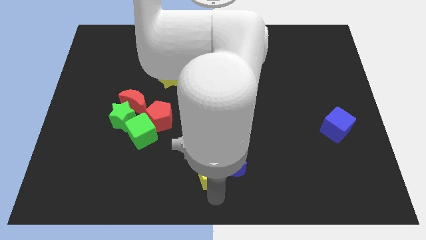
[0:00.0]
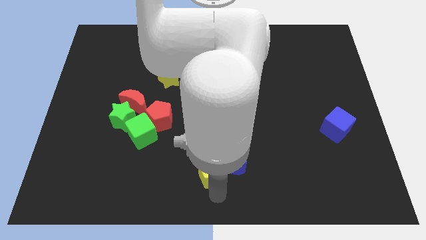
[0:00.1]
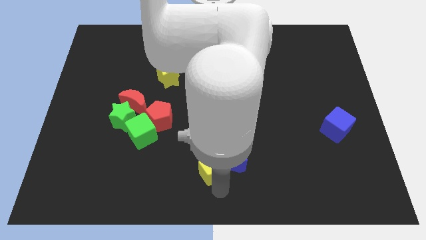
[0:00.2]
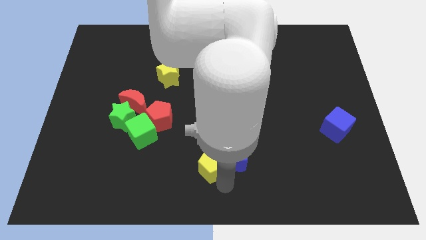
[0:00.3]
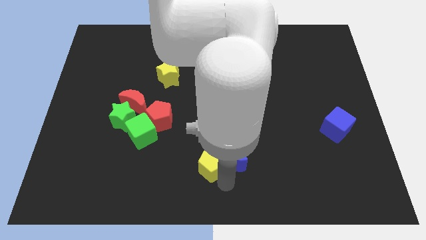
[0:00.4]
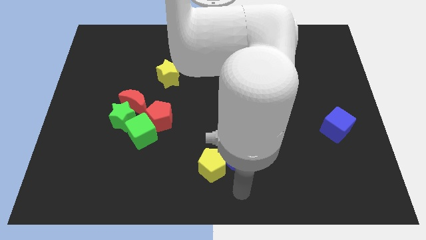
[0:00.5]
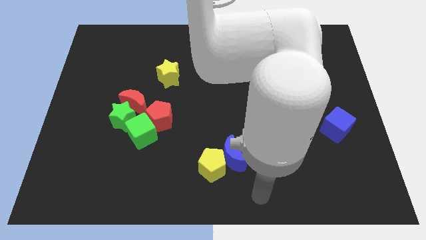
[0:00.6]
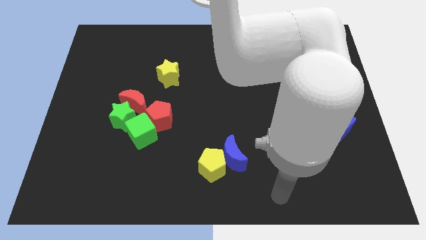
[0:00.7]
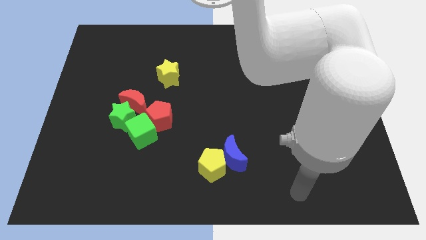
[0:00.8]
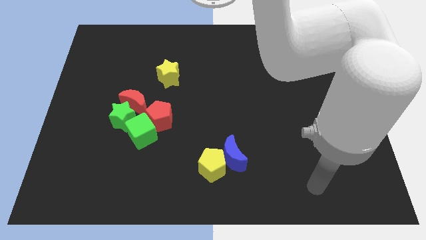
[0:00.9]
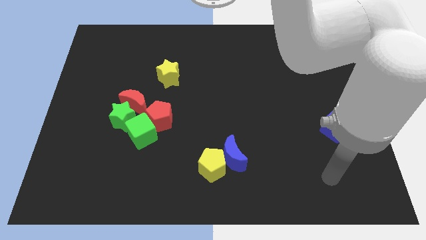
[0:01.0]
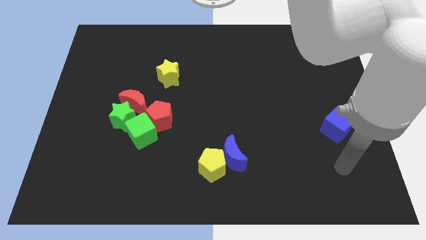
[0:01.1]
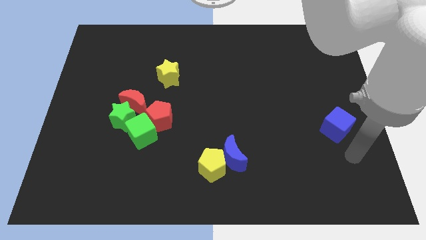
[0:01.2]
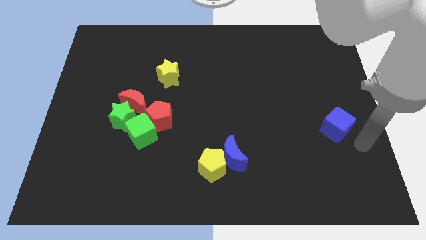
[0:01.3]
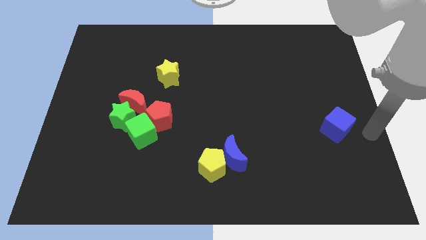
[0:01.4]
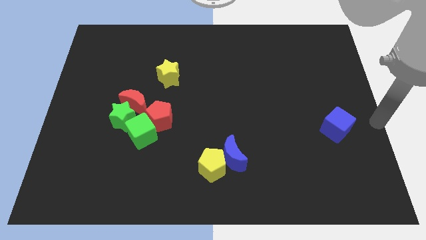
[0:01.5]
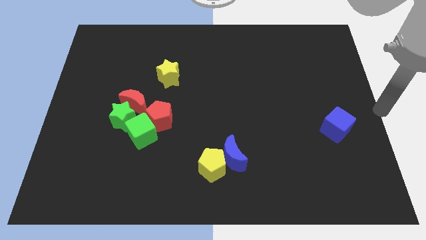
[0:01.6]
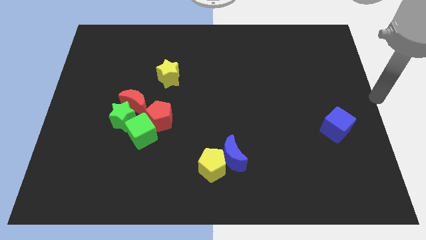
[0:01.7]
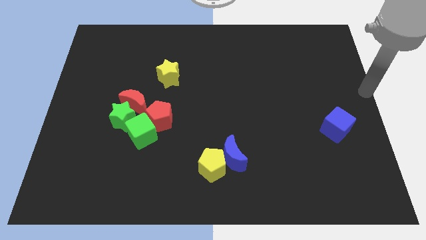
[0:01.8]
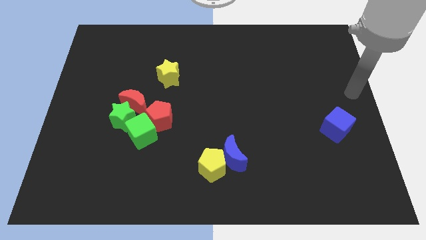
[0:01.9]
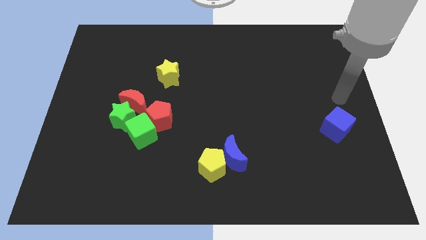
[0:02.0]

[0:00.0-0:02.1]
move the arm at the top of the blue cube

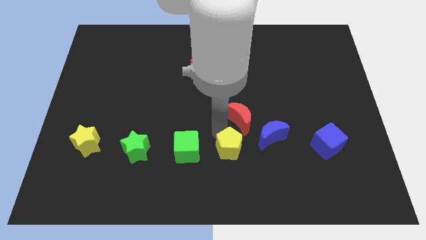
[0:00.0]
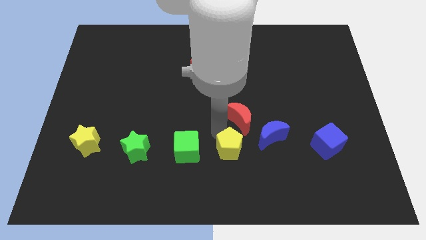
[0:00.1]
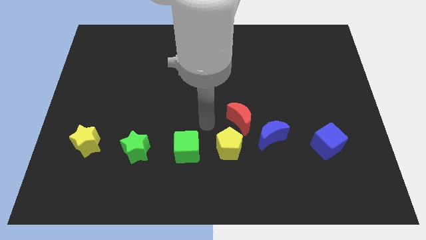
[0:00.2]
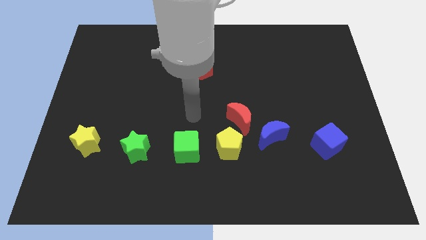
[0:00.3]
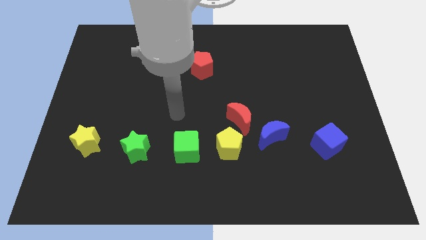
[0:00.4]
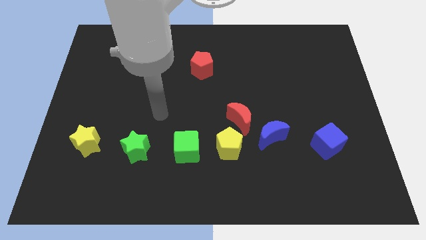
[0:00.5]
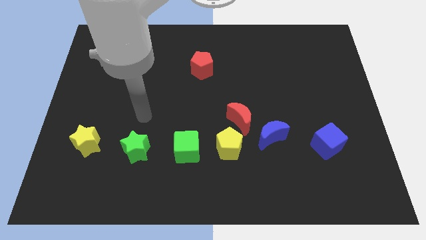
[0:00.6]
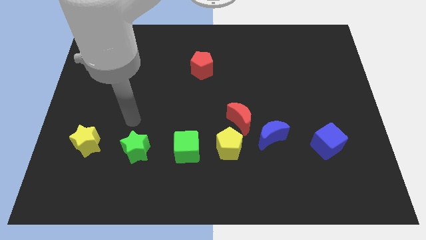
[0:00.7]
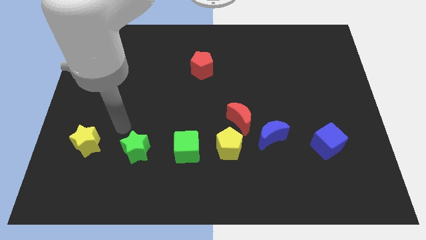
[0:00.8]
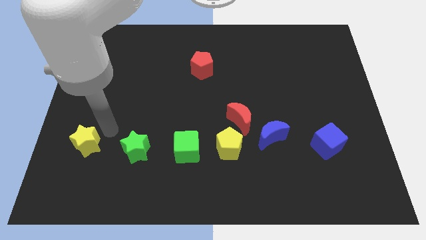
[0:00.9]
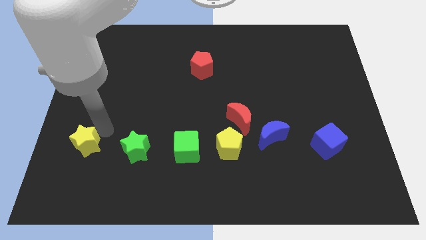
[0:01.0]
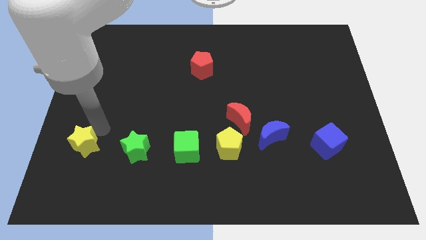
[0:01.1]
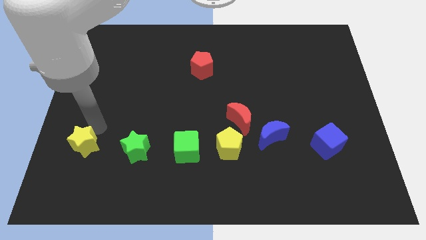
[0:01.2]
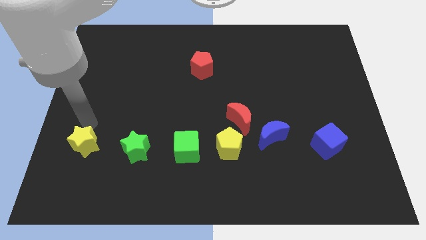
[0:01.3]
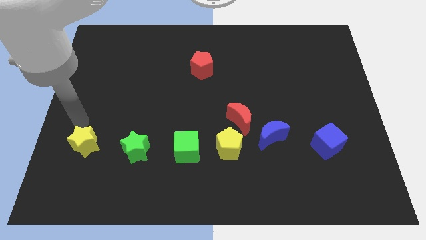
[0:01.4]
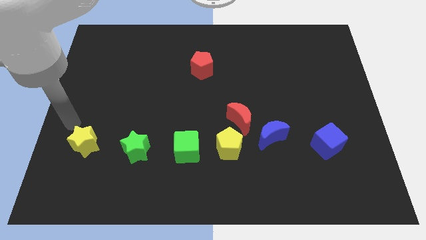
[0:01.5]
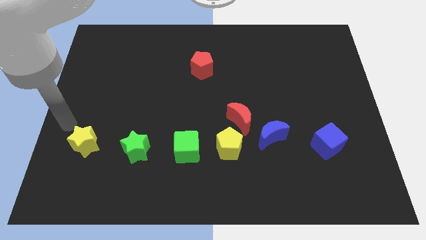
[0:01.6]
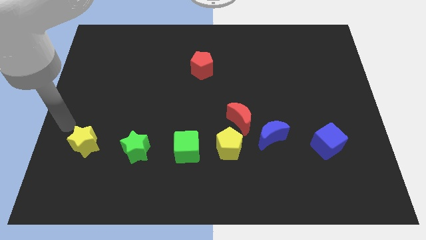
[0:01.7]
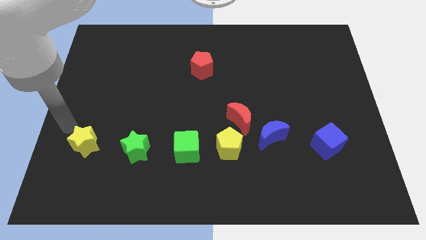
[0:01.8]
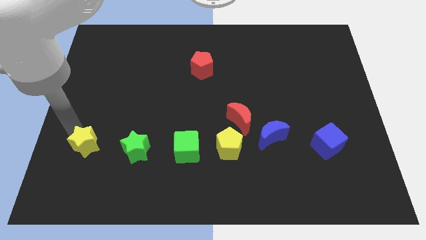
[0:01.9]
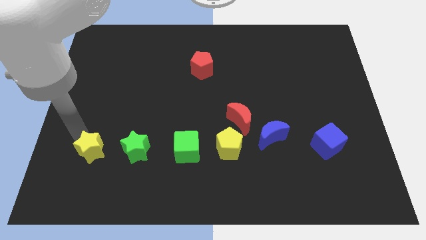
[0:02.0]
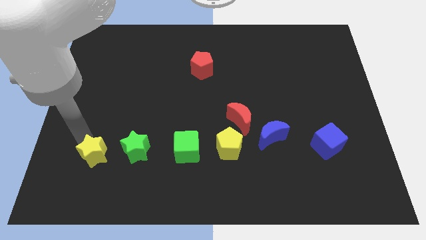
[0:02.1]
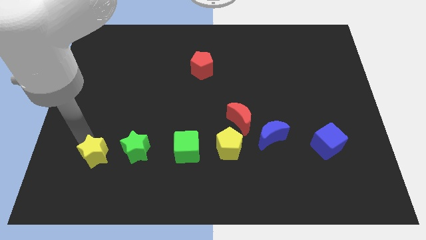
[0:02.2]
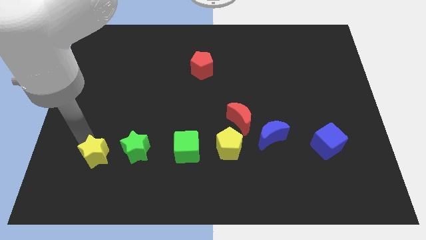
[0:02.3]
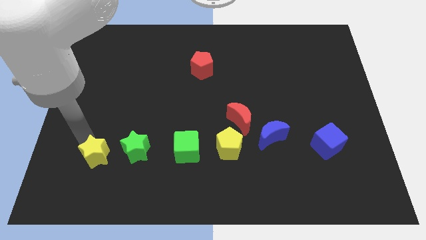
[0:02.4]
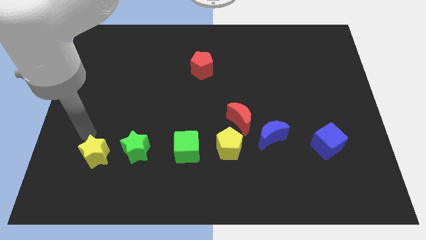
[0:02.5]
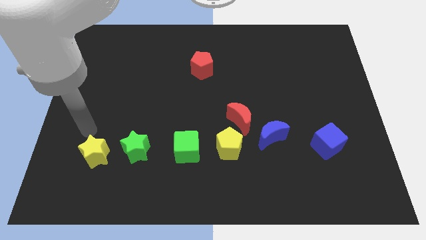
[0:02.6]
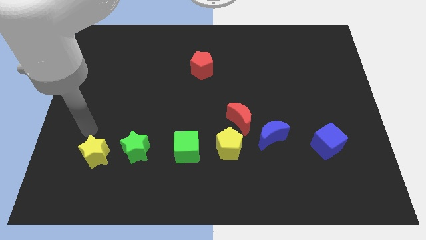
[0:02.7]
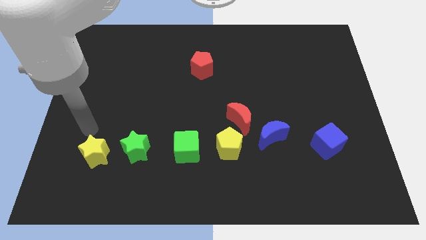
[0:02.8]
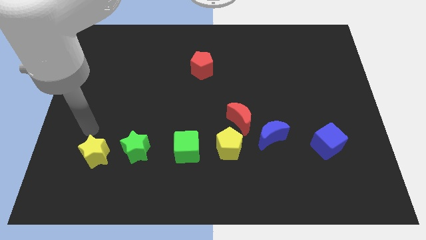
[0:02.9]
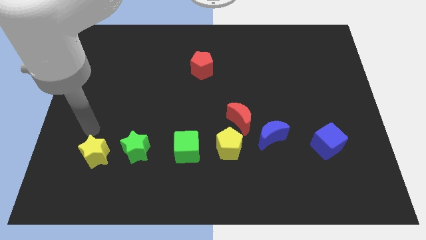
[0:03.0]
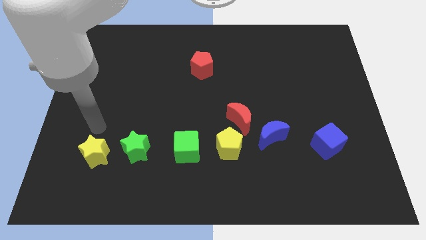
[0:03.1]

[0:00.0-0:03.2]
push the yellow star left to the green star

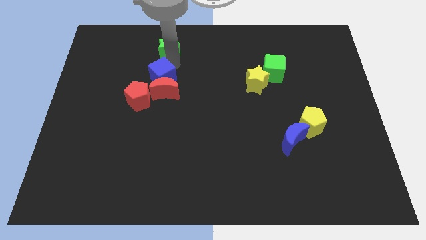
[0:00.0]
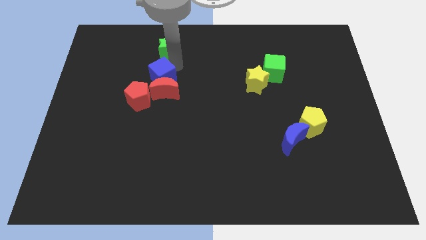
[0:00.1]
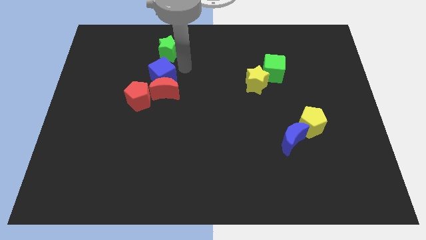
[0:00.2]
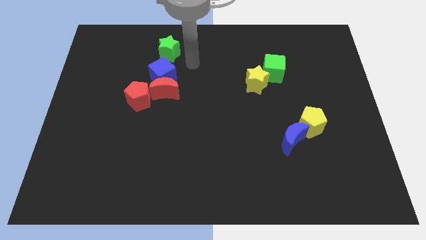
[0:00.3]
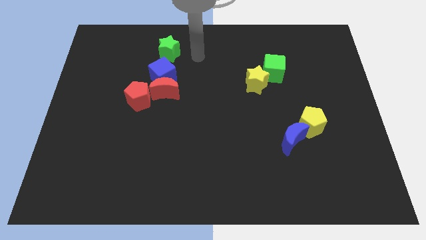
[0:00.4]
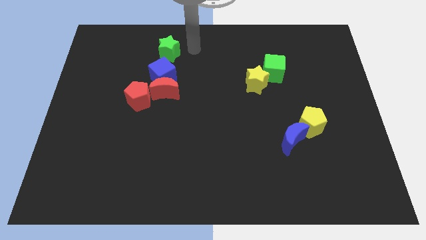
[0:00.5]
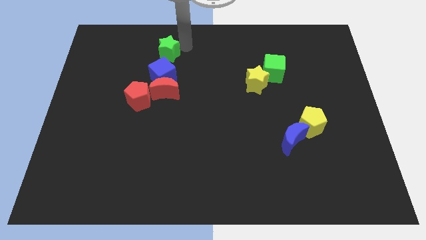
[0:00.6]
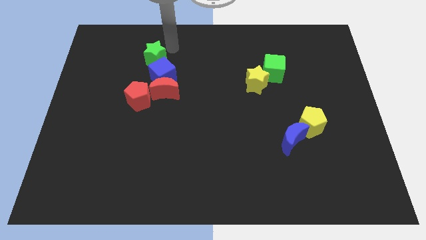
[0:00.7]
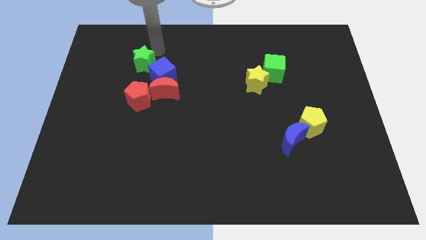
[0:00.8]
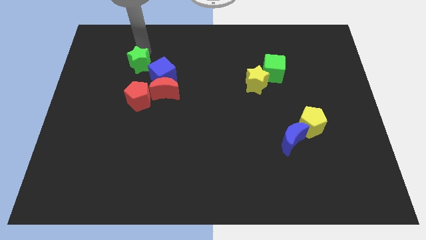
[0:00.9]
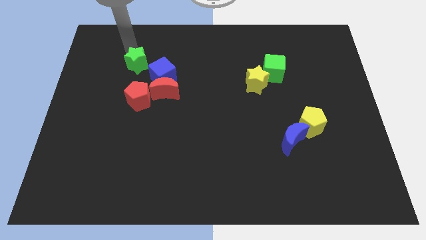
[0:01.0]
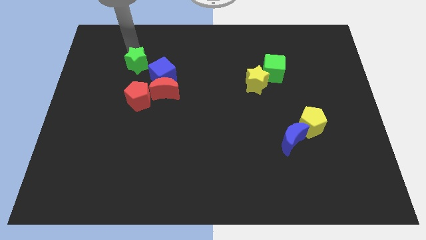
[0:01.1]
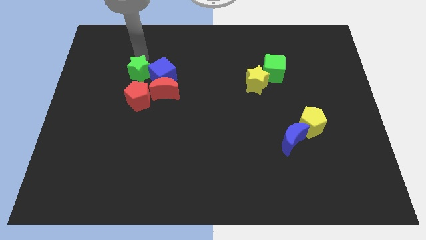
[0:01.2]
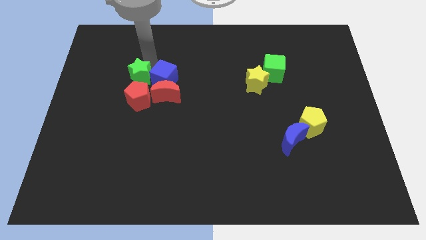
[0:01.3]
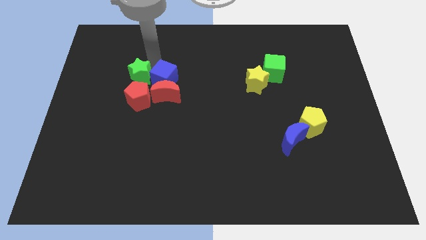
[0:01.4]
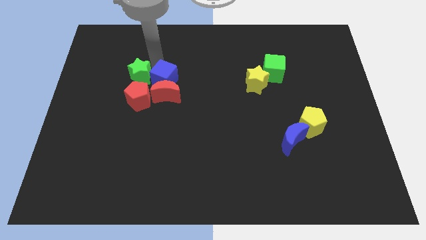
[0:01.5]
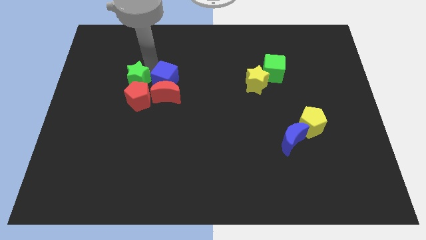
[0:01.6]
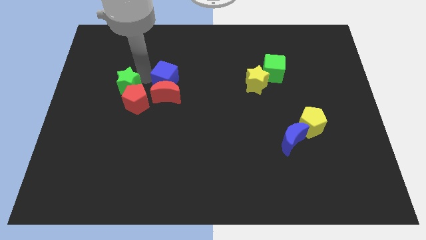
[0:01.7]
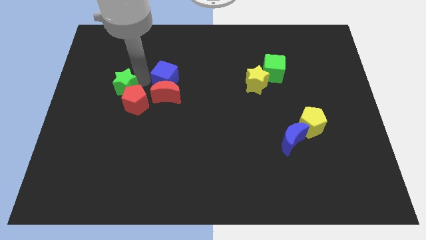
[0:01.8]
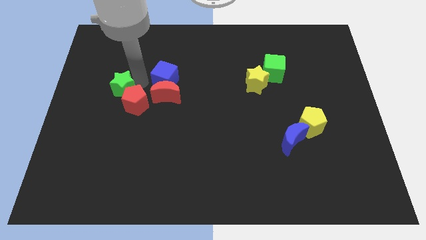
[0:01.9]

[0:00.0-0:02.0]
move the blue cube slightly towards the left top of the board

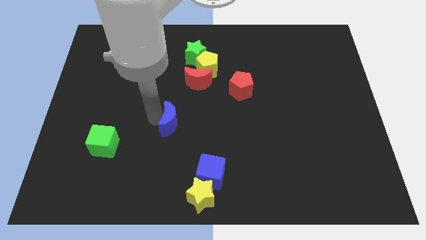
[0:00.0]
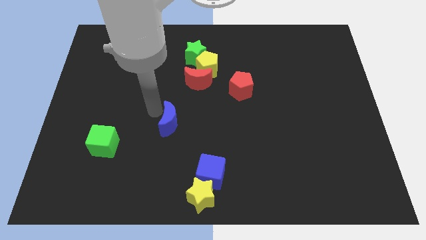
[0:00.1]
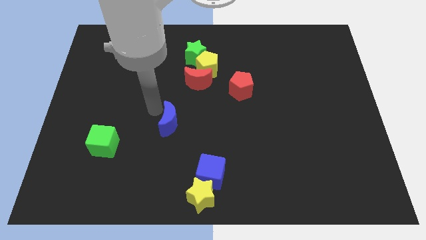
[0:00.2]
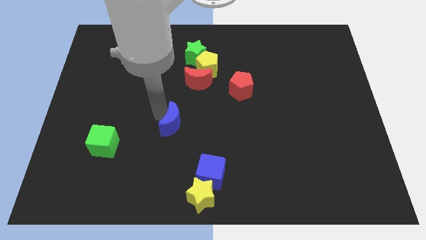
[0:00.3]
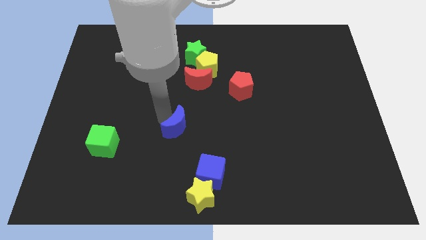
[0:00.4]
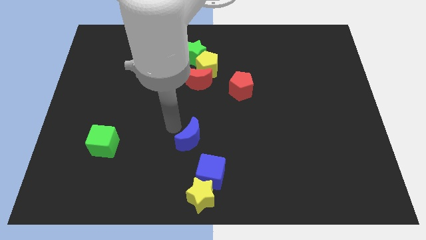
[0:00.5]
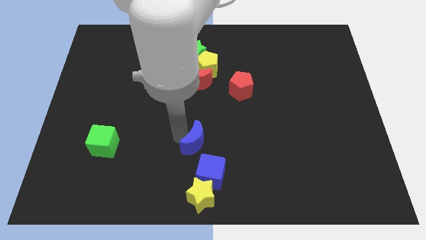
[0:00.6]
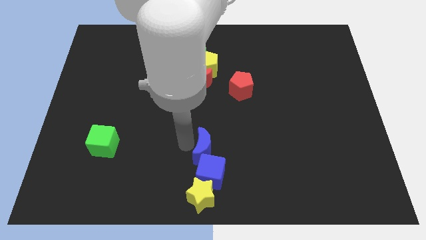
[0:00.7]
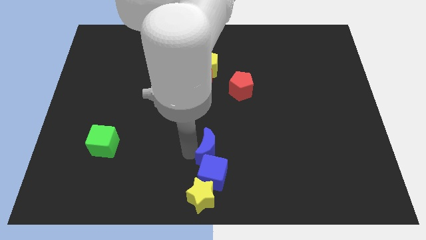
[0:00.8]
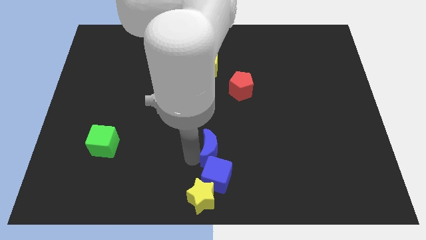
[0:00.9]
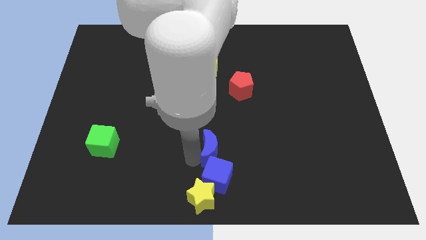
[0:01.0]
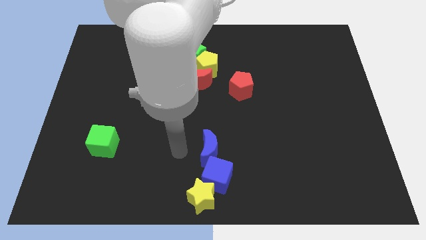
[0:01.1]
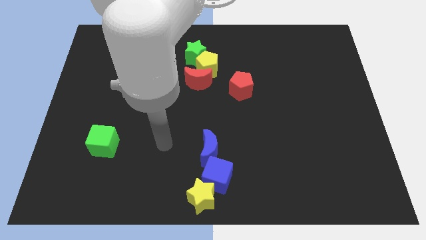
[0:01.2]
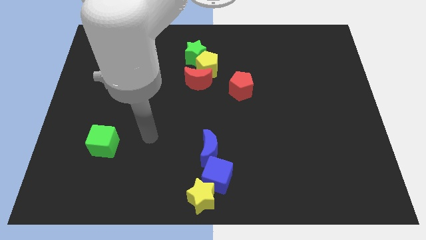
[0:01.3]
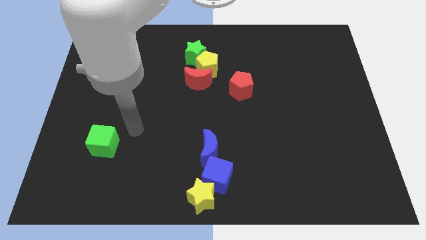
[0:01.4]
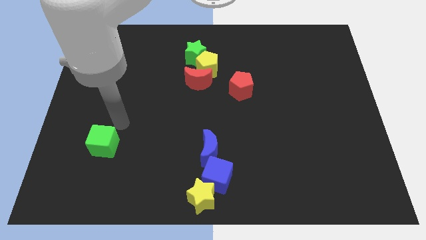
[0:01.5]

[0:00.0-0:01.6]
push the blue crescent into the blue cube

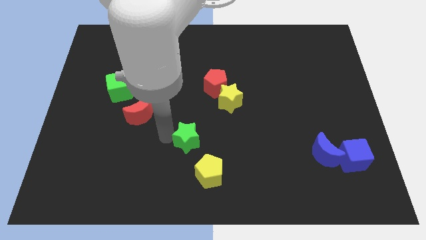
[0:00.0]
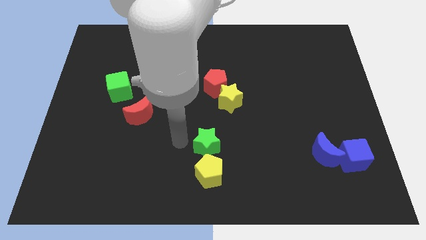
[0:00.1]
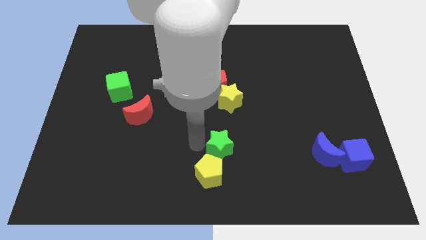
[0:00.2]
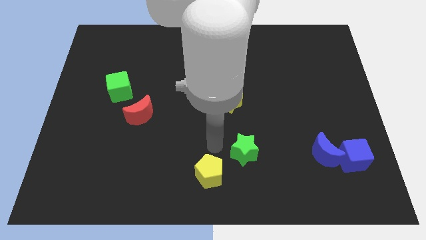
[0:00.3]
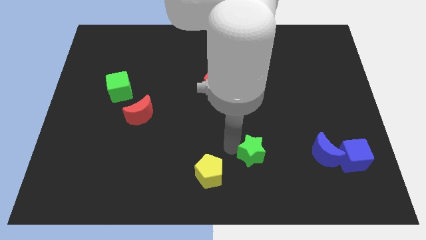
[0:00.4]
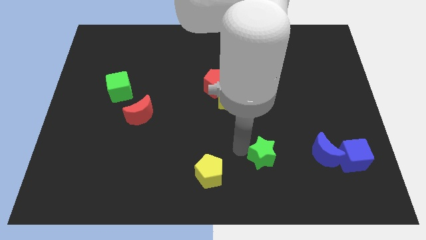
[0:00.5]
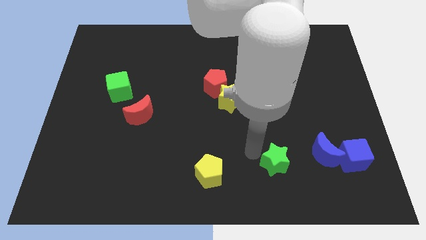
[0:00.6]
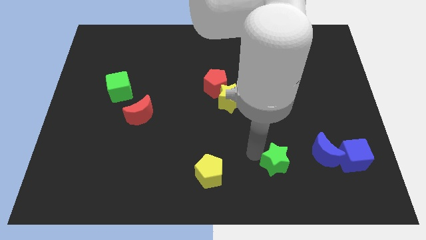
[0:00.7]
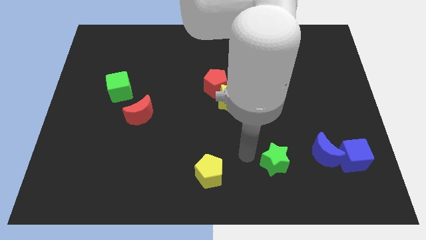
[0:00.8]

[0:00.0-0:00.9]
move the green star in between yellow pentagon and blue moon
